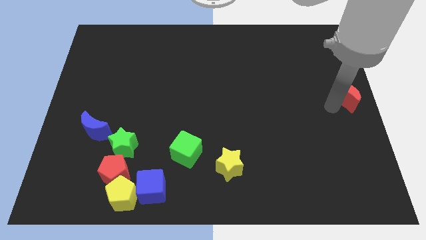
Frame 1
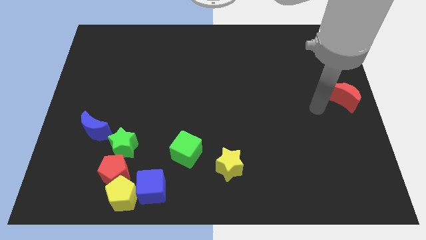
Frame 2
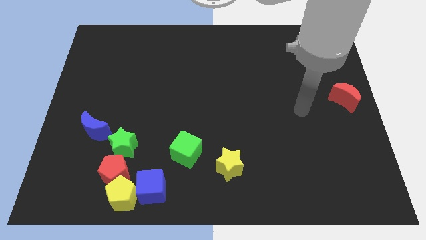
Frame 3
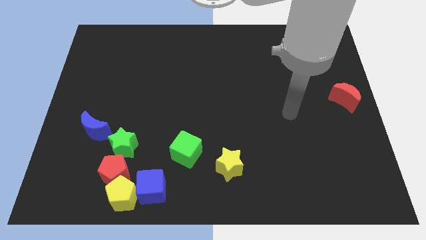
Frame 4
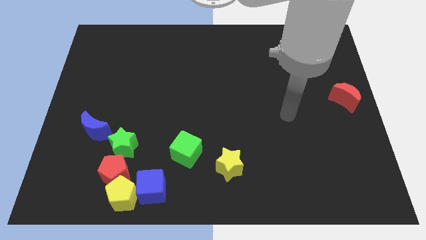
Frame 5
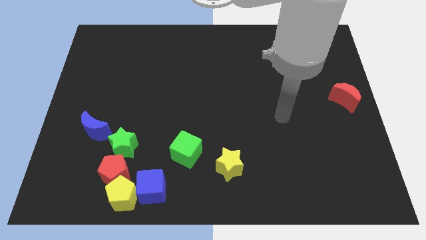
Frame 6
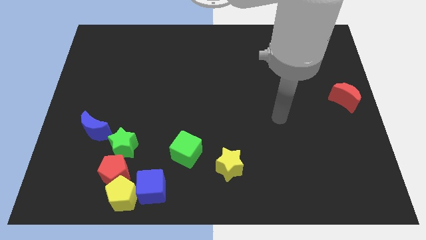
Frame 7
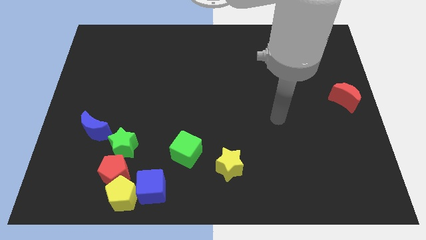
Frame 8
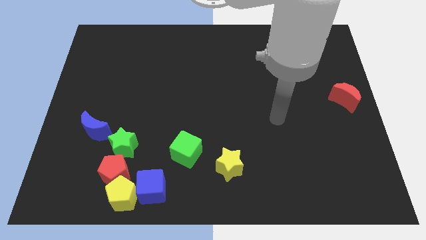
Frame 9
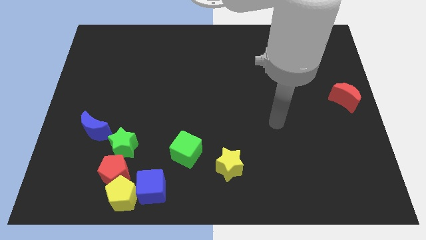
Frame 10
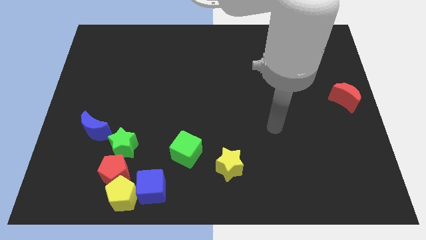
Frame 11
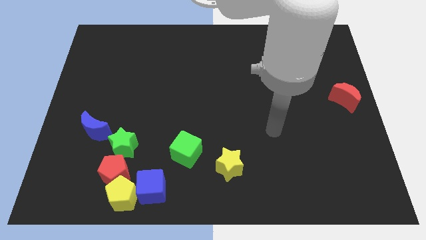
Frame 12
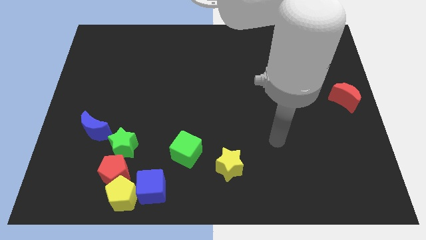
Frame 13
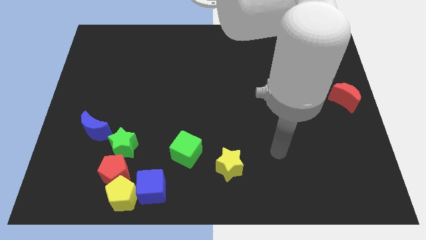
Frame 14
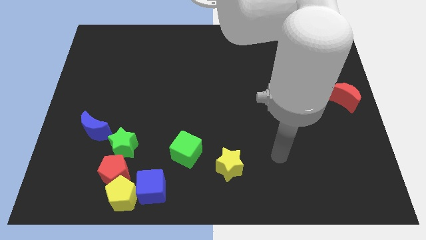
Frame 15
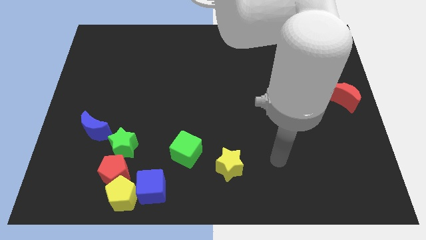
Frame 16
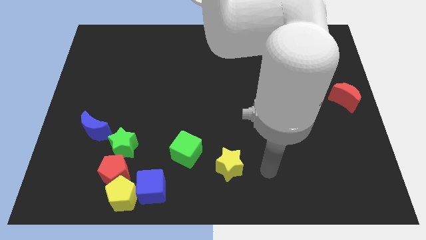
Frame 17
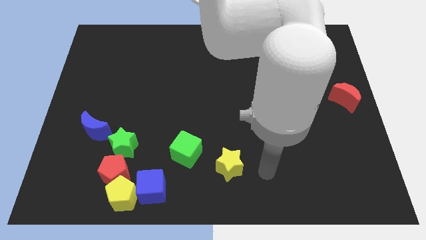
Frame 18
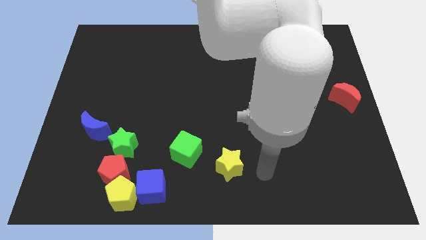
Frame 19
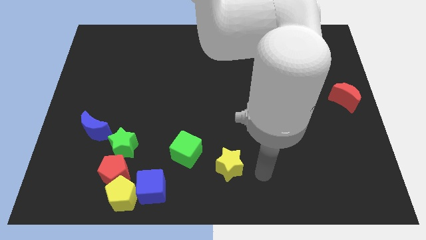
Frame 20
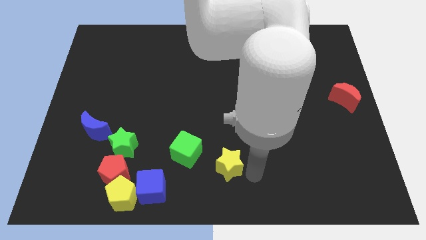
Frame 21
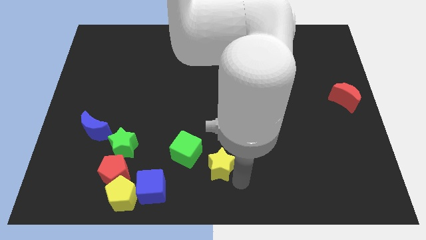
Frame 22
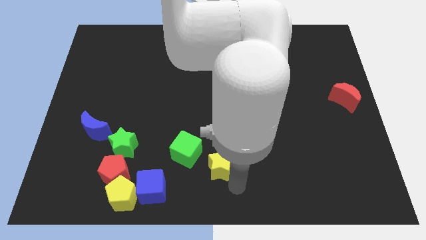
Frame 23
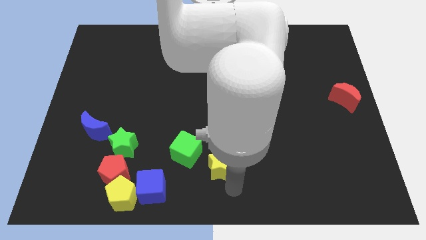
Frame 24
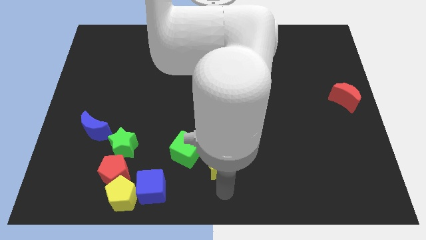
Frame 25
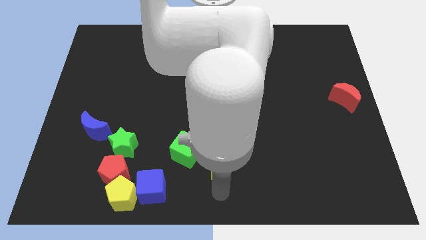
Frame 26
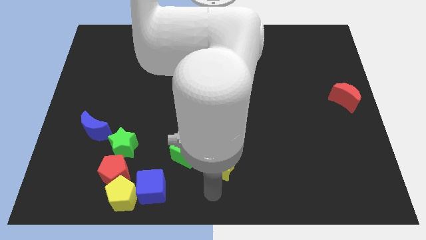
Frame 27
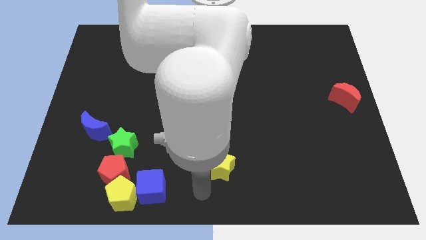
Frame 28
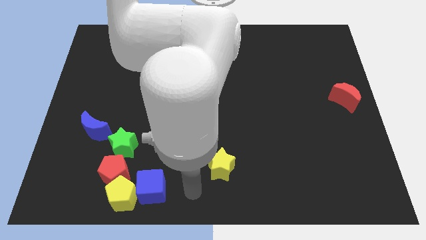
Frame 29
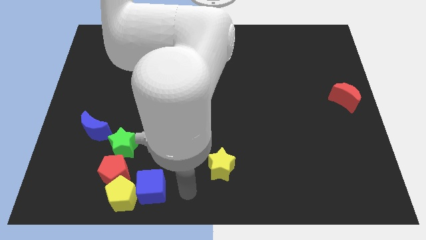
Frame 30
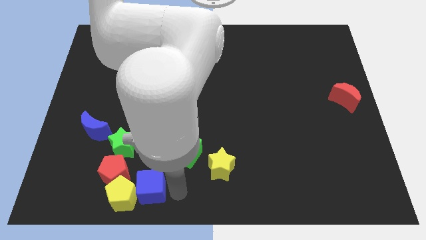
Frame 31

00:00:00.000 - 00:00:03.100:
slide yellow star and blue cube slightly to the left

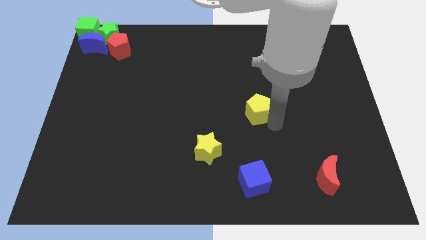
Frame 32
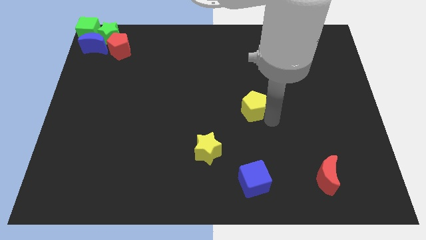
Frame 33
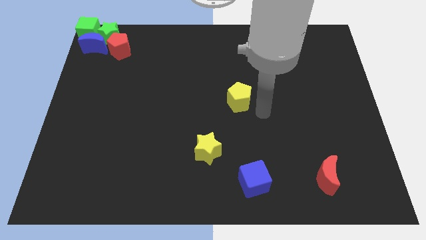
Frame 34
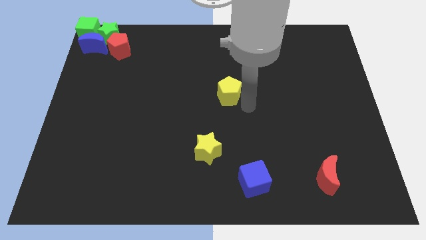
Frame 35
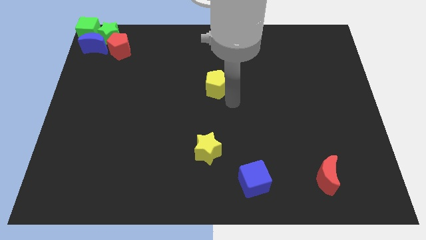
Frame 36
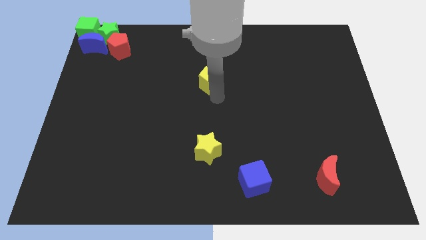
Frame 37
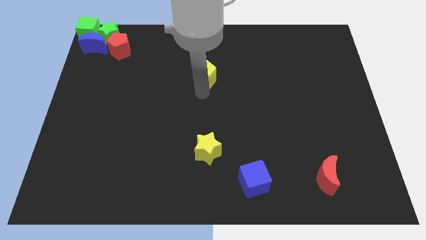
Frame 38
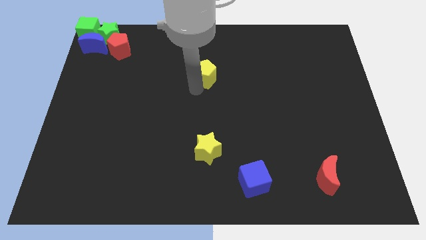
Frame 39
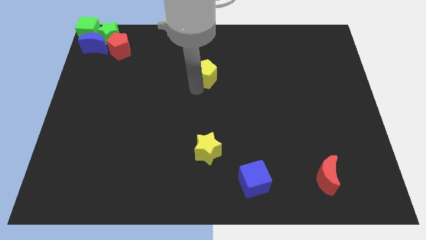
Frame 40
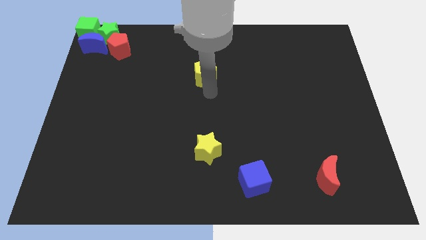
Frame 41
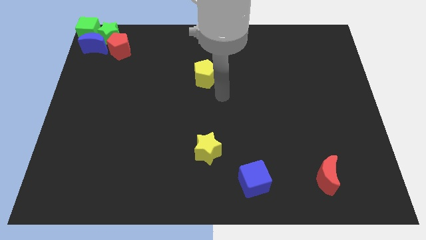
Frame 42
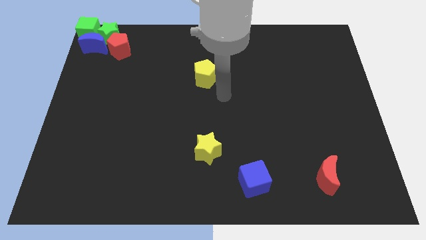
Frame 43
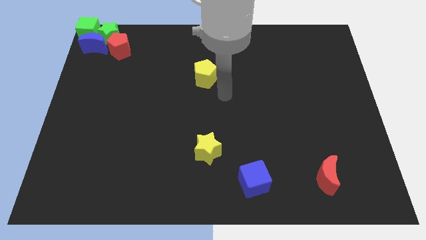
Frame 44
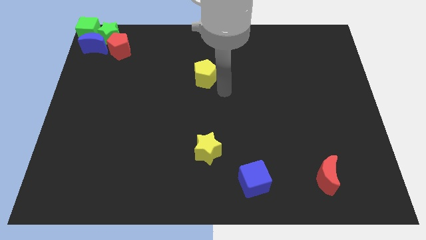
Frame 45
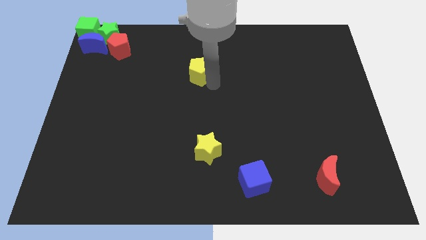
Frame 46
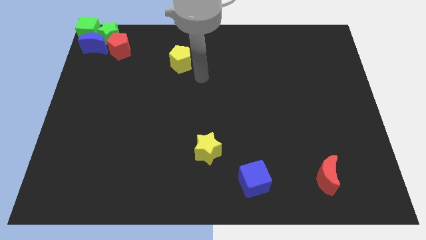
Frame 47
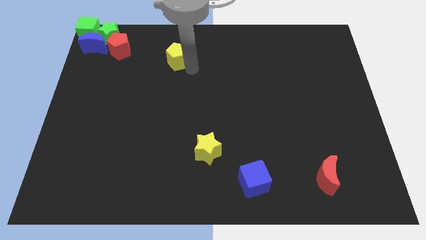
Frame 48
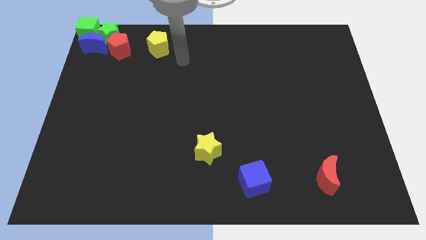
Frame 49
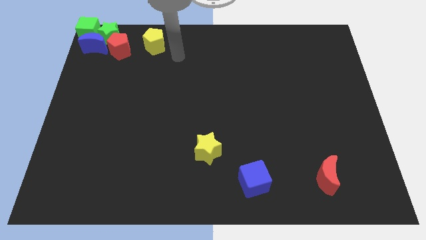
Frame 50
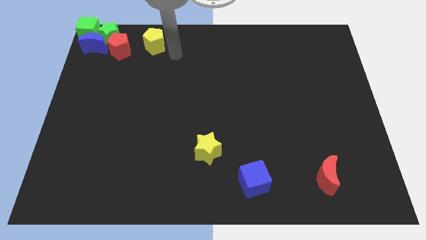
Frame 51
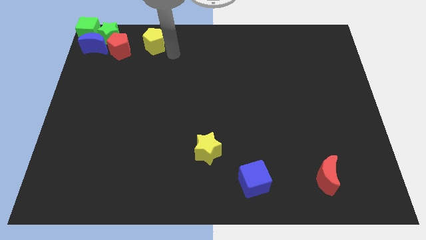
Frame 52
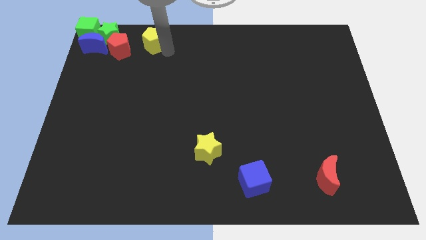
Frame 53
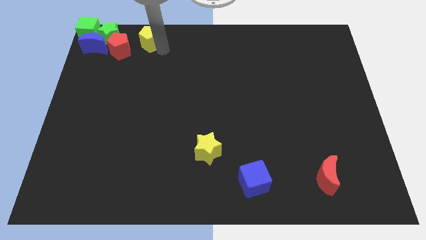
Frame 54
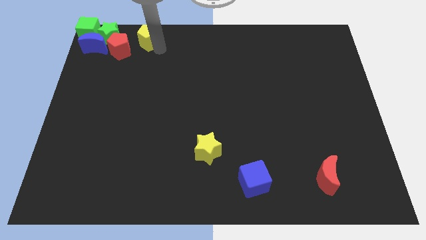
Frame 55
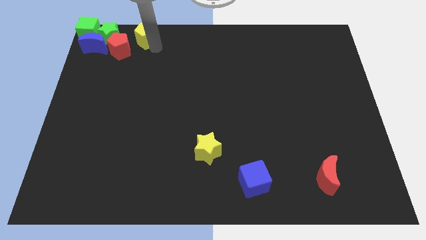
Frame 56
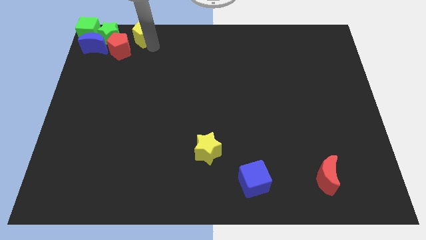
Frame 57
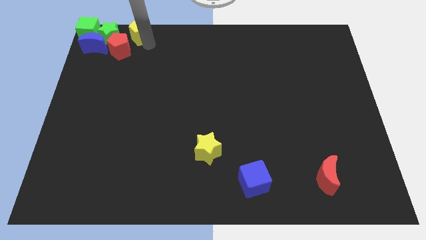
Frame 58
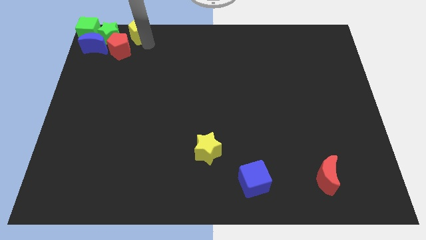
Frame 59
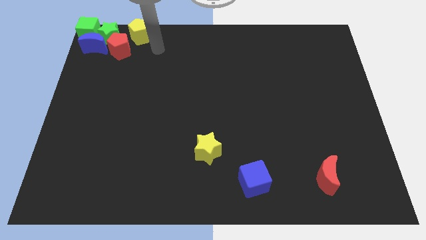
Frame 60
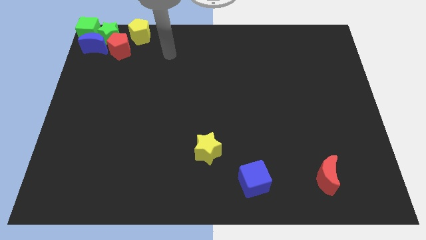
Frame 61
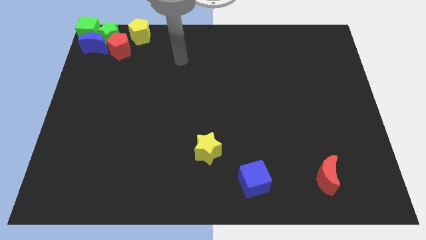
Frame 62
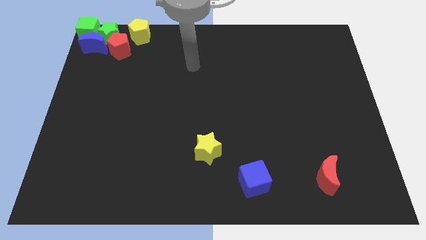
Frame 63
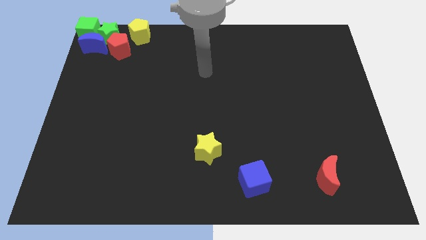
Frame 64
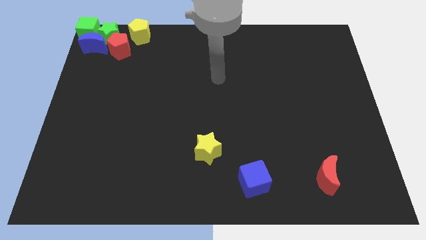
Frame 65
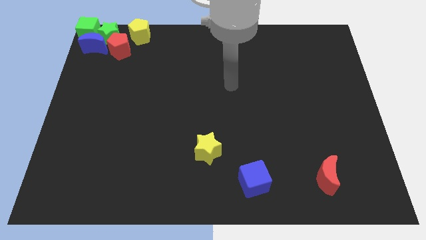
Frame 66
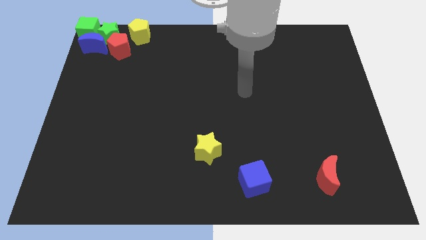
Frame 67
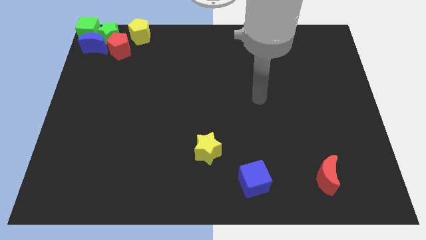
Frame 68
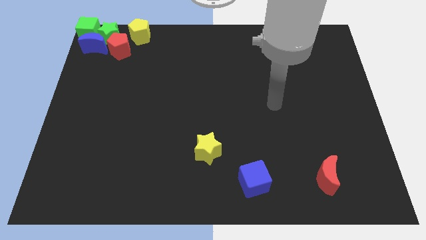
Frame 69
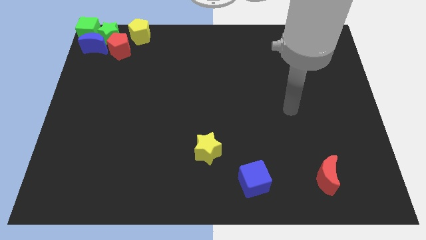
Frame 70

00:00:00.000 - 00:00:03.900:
put the yellow pentagon on the right side of the green star

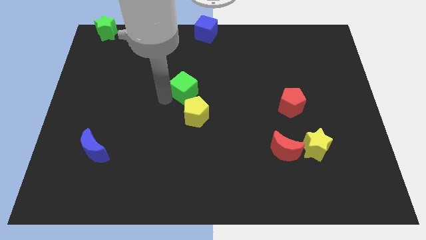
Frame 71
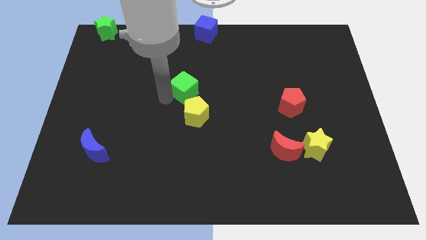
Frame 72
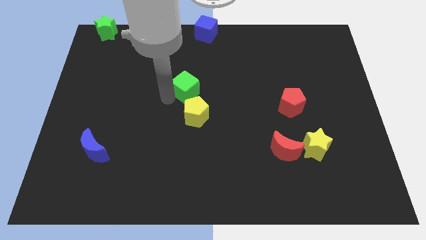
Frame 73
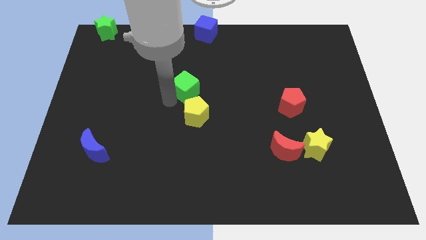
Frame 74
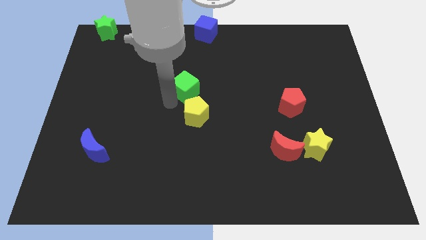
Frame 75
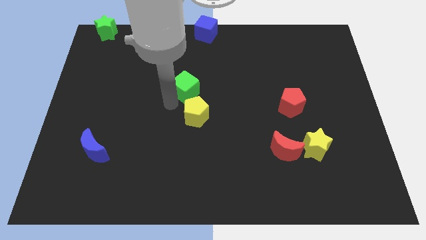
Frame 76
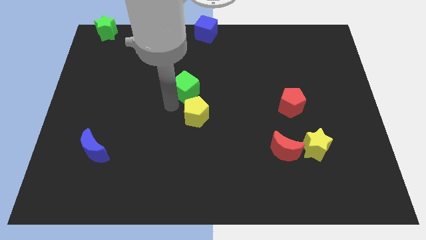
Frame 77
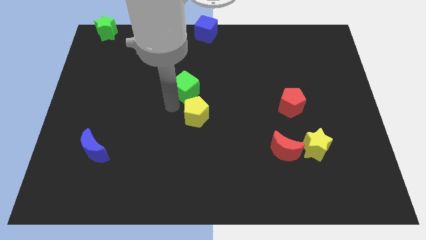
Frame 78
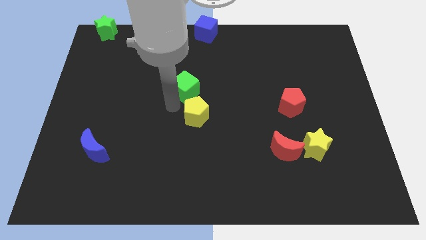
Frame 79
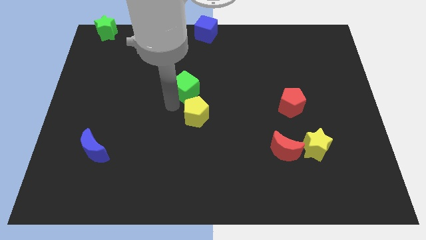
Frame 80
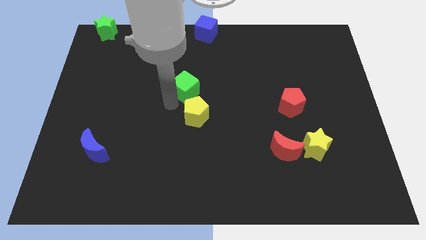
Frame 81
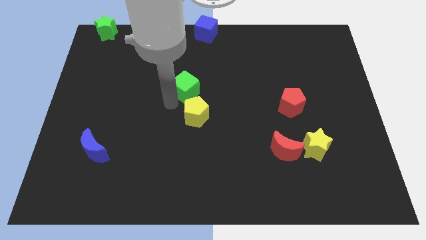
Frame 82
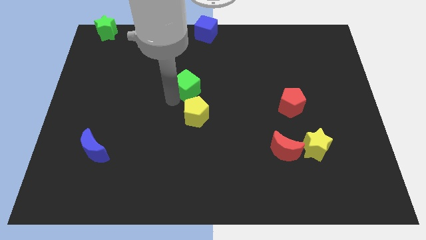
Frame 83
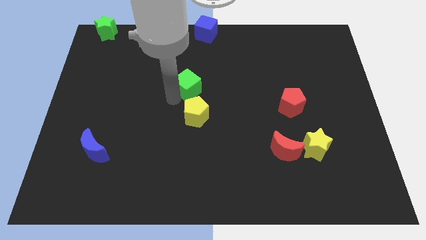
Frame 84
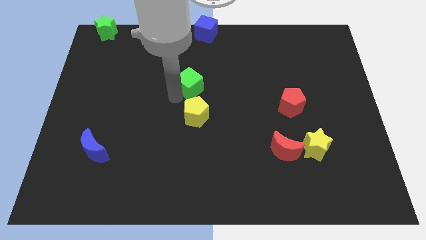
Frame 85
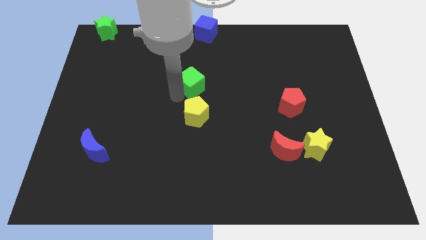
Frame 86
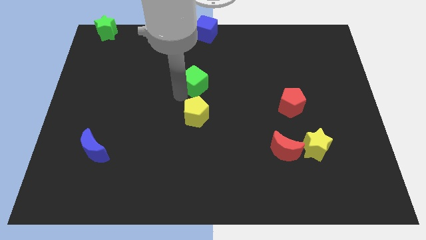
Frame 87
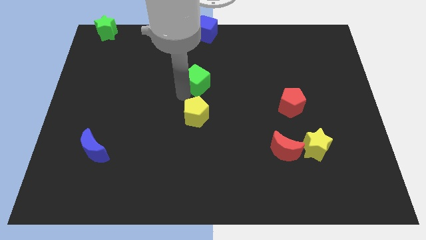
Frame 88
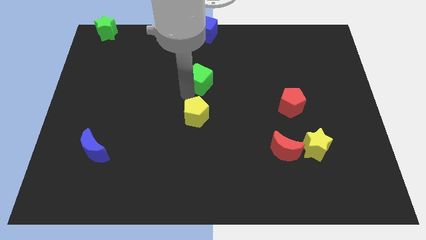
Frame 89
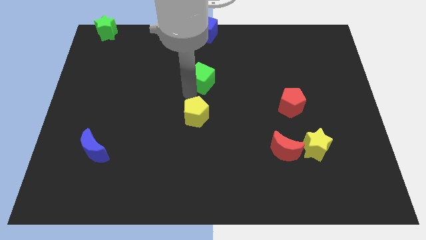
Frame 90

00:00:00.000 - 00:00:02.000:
put the green cube above the yellow pentagon
